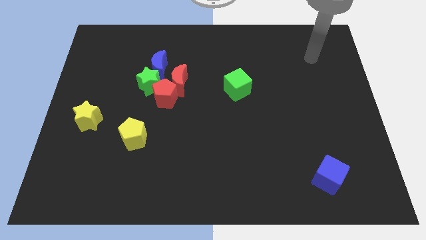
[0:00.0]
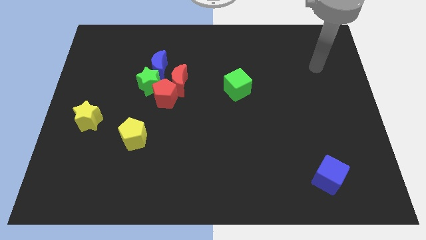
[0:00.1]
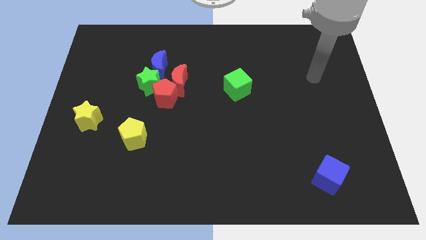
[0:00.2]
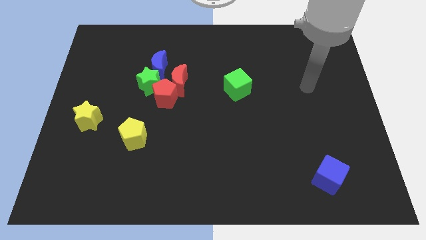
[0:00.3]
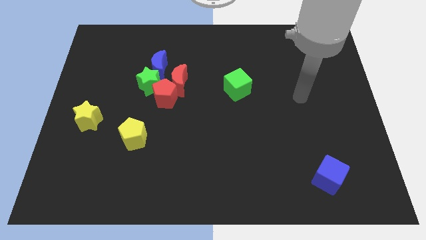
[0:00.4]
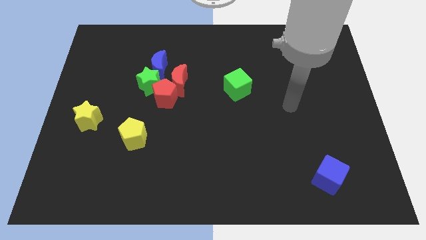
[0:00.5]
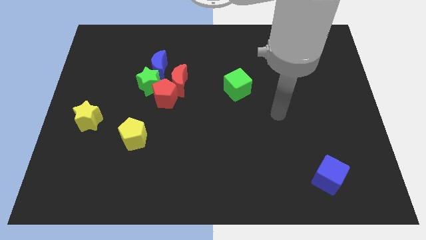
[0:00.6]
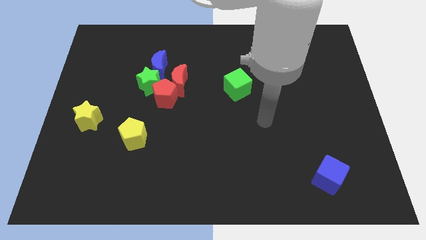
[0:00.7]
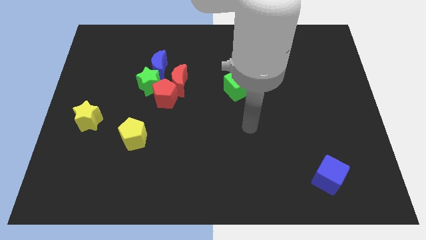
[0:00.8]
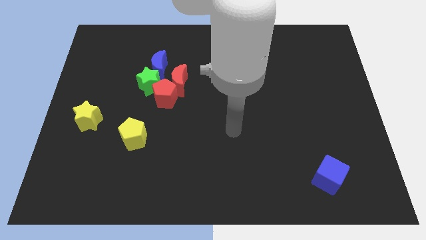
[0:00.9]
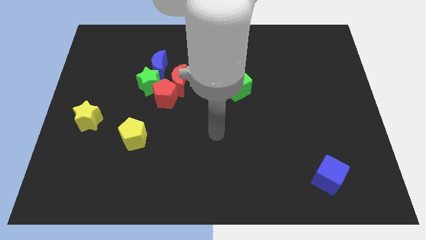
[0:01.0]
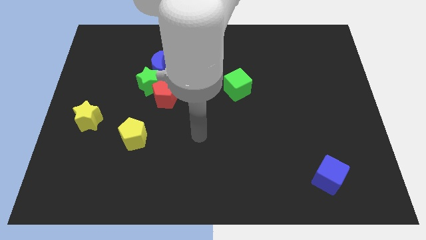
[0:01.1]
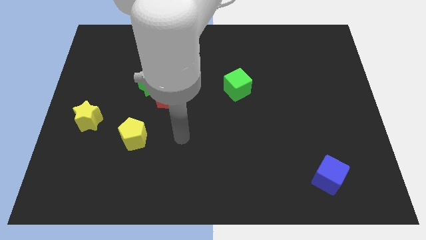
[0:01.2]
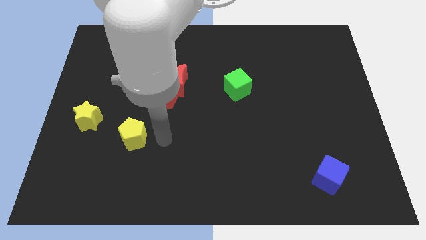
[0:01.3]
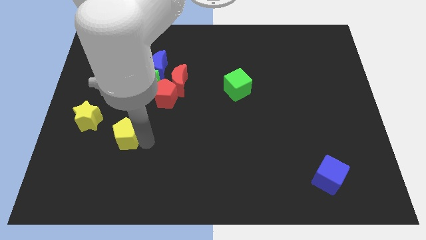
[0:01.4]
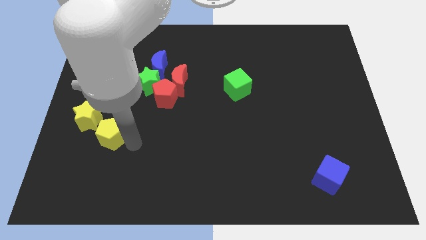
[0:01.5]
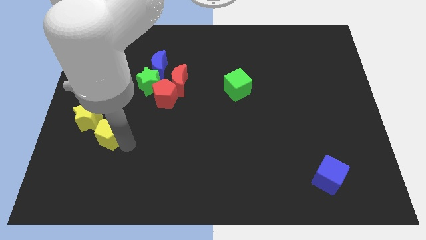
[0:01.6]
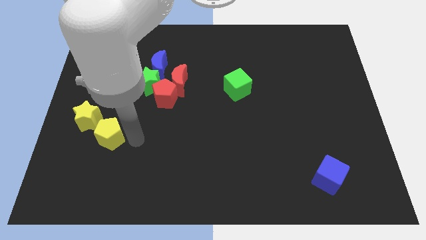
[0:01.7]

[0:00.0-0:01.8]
move the yellow towards the right side of the yellow star

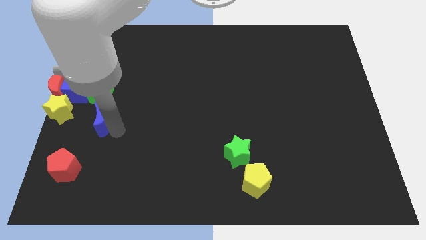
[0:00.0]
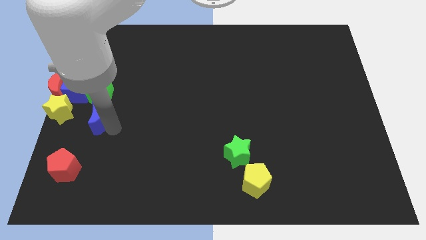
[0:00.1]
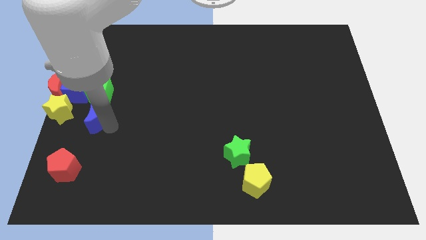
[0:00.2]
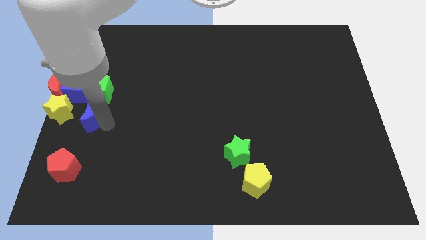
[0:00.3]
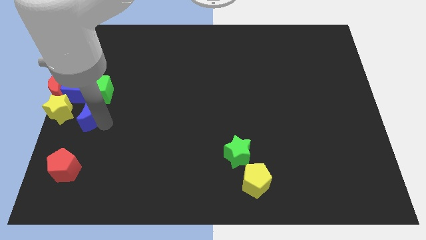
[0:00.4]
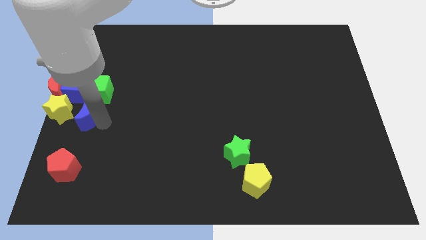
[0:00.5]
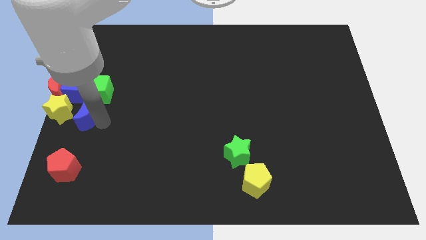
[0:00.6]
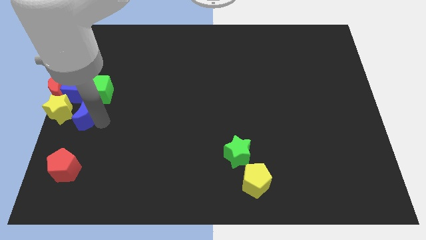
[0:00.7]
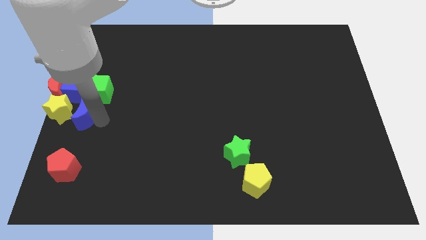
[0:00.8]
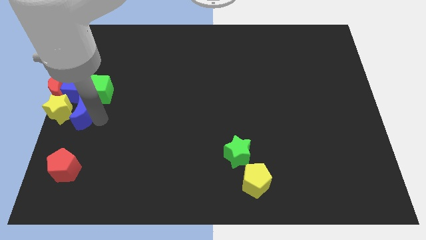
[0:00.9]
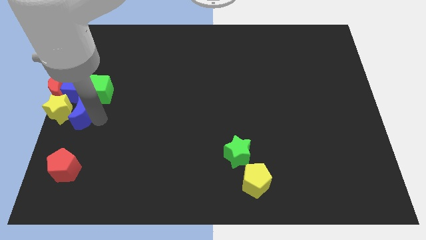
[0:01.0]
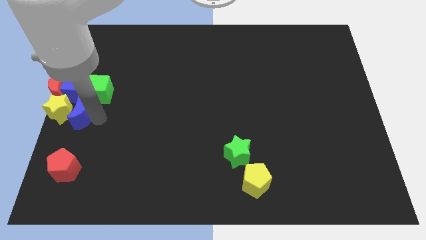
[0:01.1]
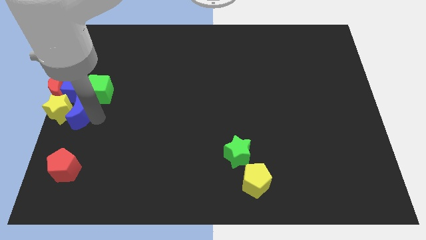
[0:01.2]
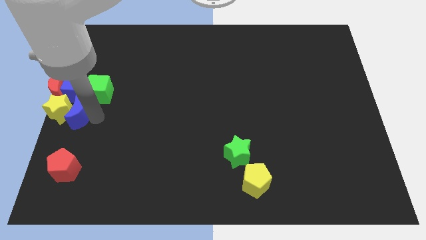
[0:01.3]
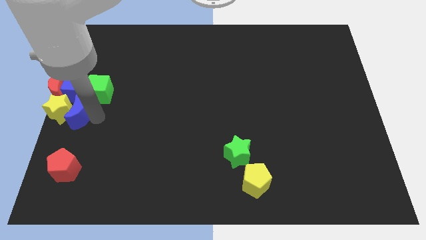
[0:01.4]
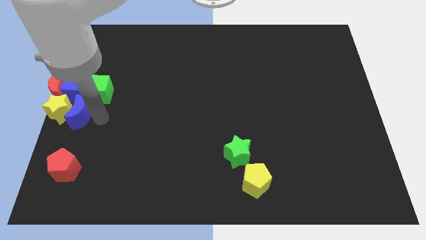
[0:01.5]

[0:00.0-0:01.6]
place blue crescent below blue cube

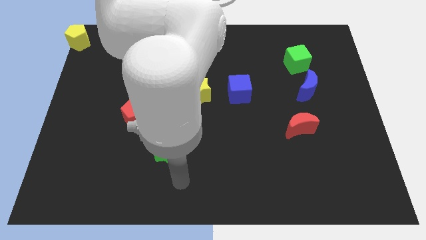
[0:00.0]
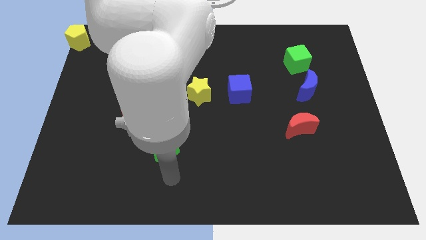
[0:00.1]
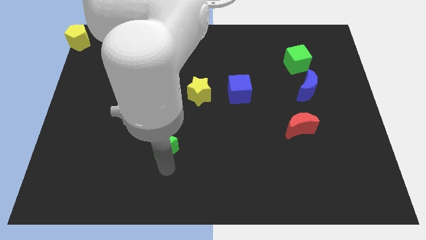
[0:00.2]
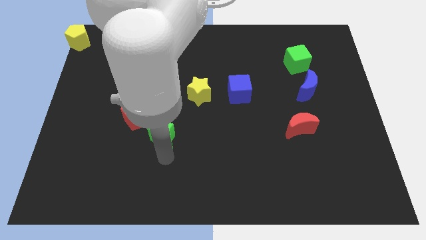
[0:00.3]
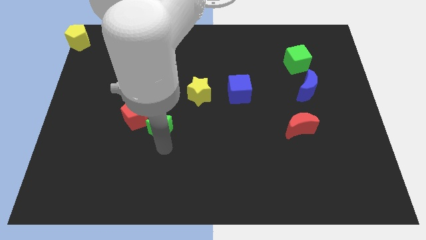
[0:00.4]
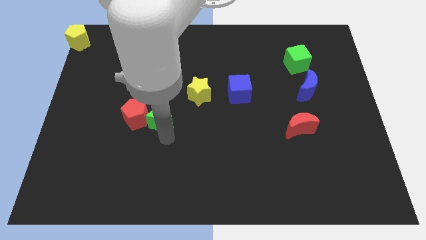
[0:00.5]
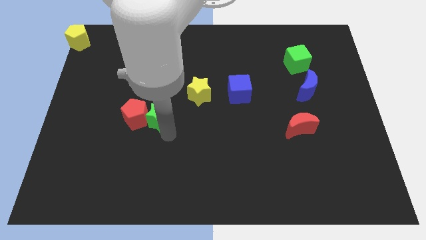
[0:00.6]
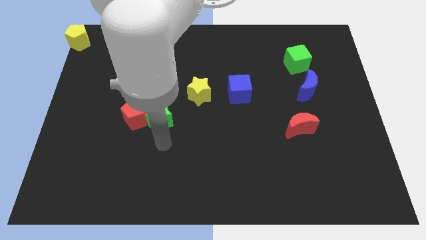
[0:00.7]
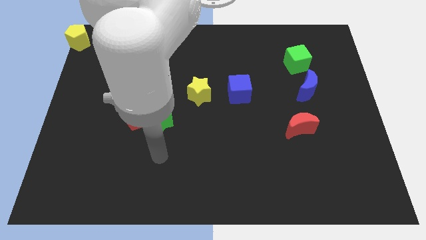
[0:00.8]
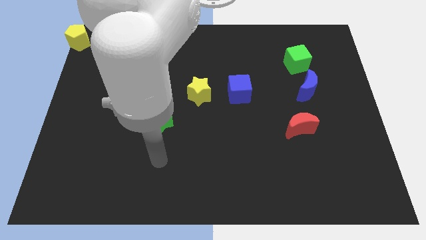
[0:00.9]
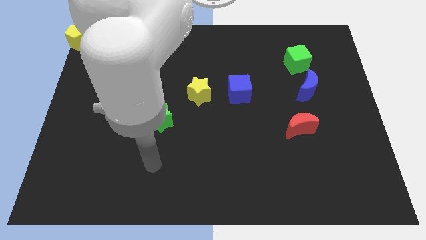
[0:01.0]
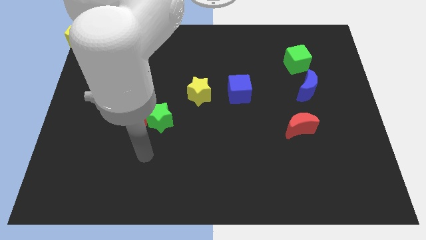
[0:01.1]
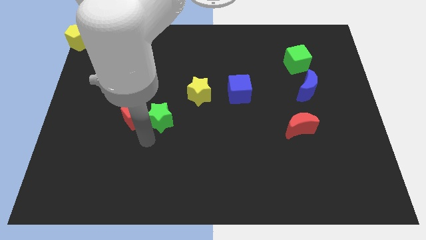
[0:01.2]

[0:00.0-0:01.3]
place green star to the right of red pentagon

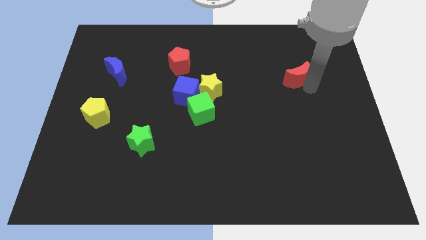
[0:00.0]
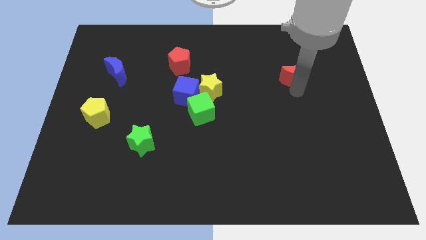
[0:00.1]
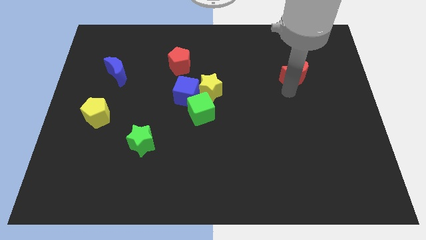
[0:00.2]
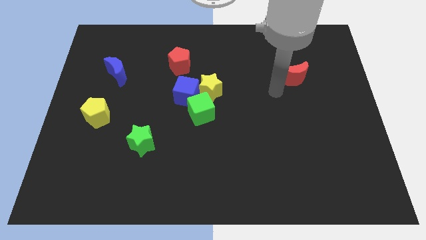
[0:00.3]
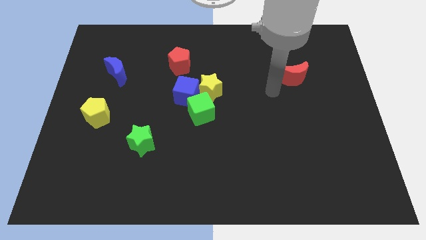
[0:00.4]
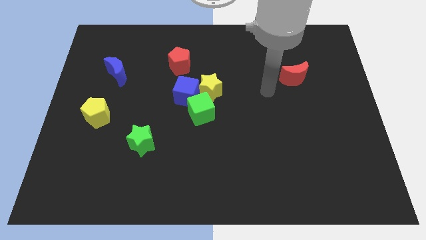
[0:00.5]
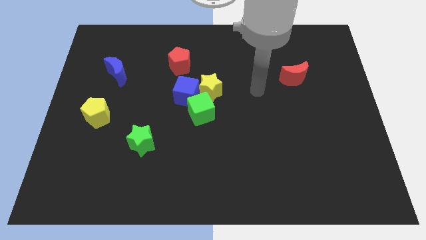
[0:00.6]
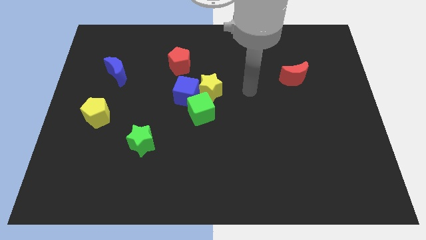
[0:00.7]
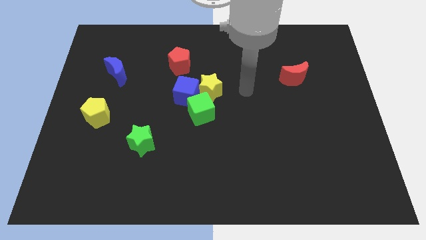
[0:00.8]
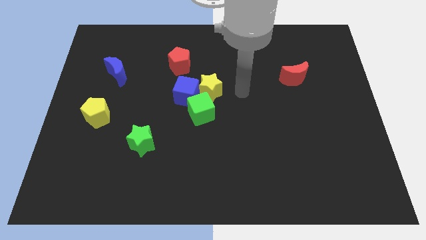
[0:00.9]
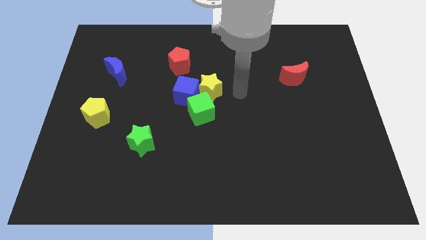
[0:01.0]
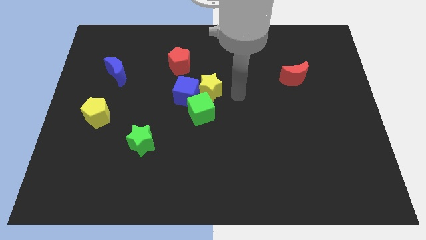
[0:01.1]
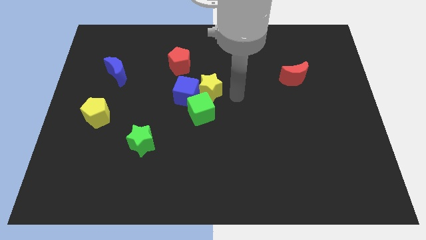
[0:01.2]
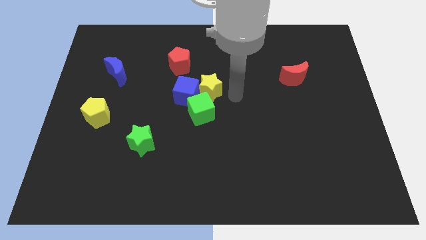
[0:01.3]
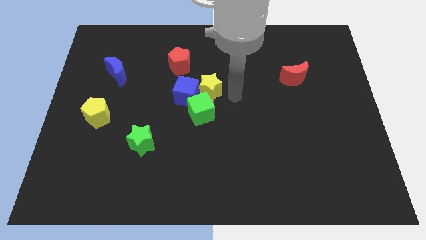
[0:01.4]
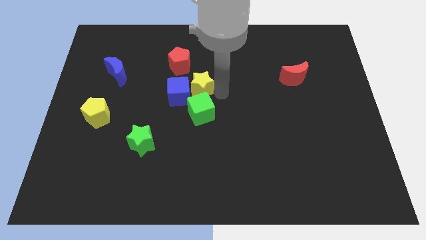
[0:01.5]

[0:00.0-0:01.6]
move your arm to the right of the yellow star

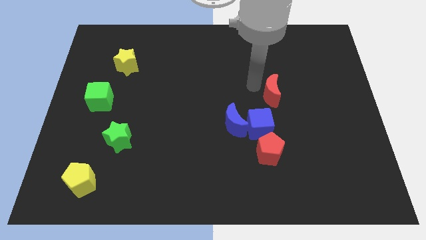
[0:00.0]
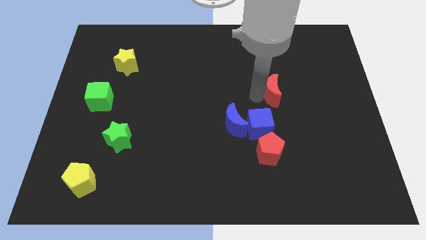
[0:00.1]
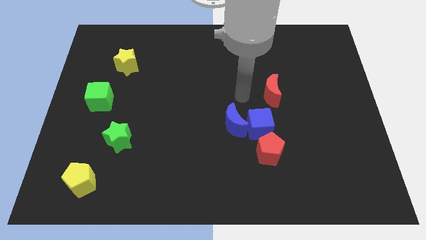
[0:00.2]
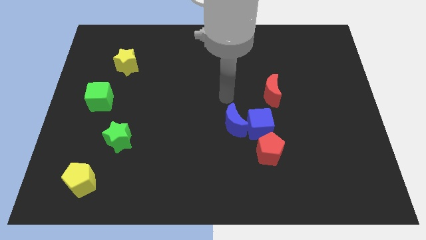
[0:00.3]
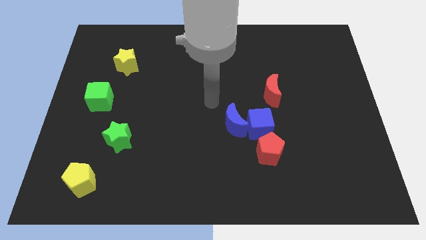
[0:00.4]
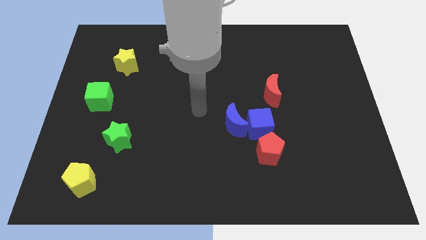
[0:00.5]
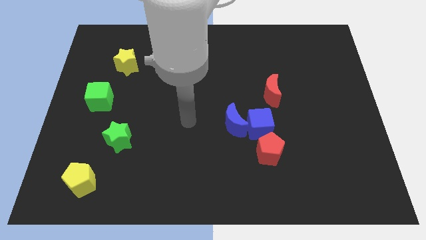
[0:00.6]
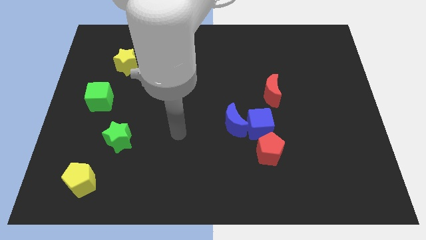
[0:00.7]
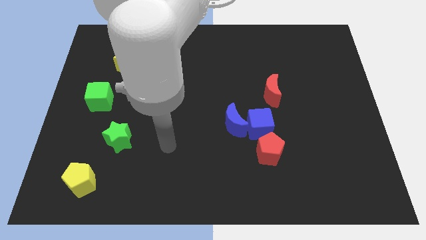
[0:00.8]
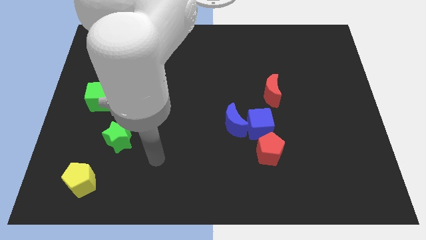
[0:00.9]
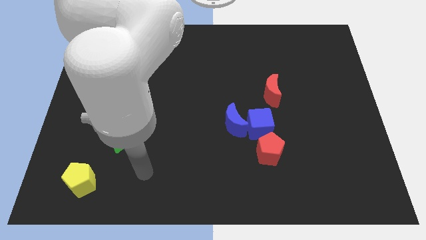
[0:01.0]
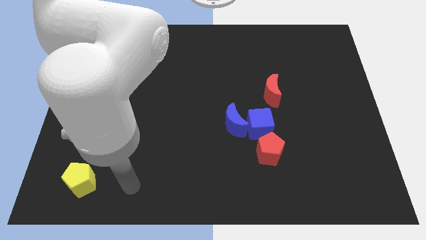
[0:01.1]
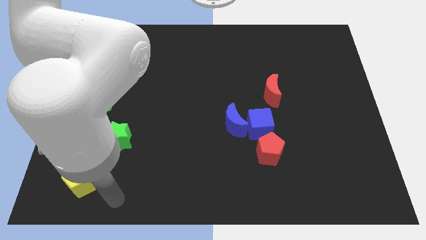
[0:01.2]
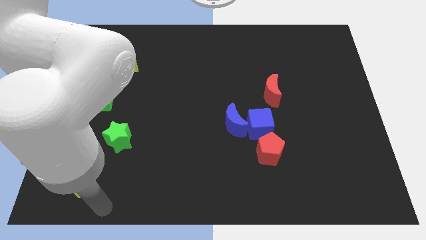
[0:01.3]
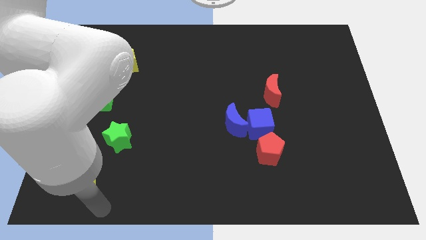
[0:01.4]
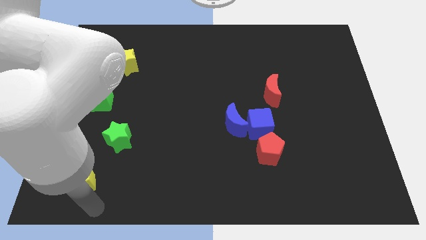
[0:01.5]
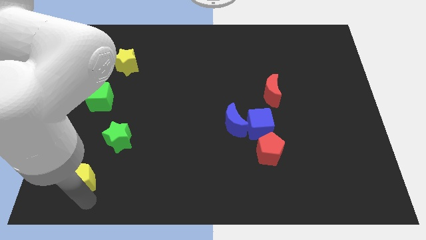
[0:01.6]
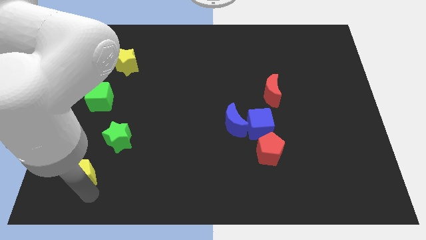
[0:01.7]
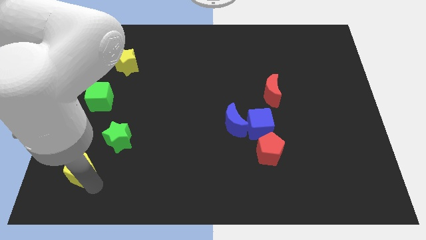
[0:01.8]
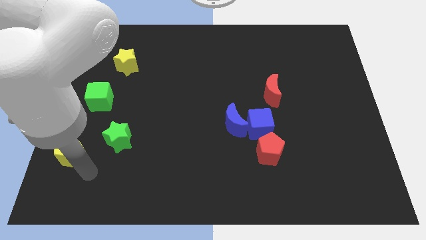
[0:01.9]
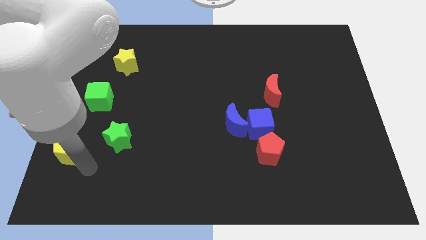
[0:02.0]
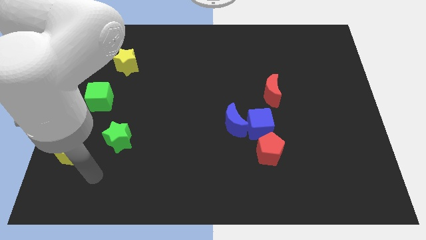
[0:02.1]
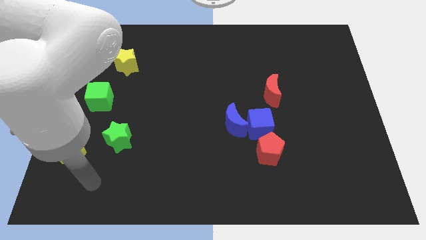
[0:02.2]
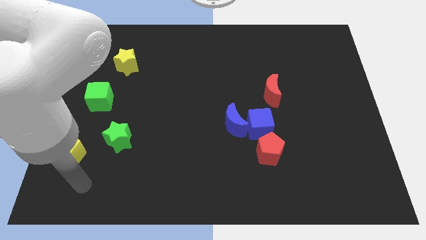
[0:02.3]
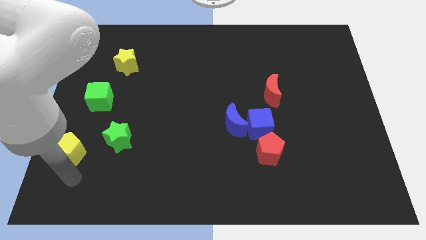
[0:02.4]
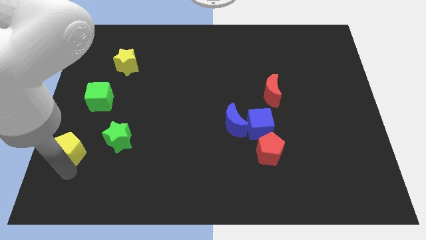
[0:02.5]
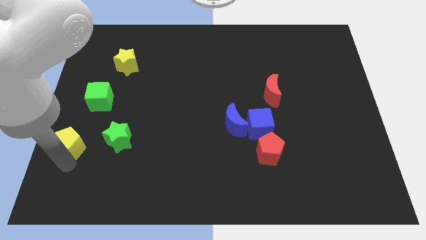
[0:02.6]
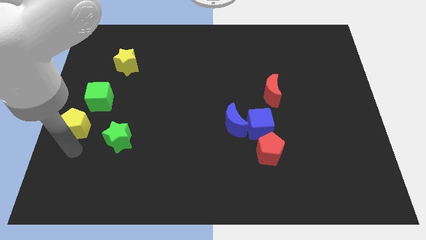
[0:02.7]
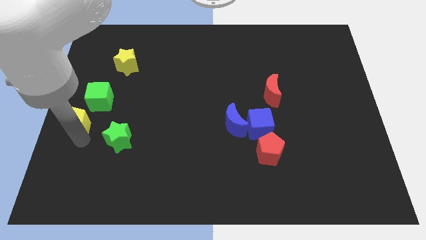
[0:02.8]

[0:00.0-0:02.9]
push the yellow pentagon towards the top side of the board
